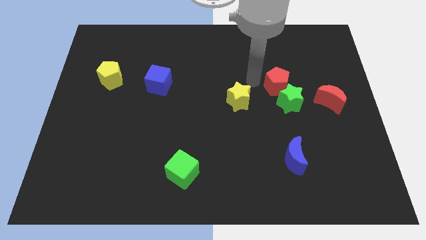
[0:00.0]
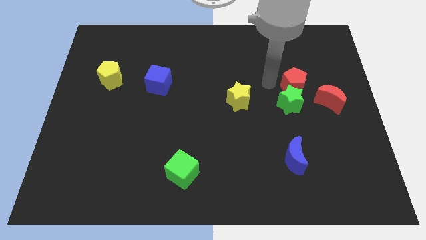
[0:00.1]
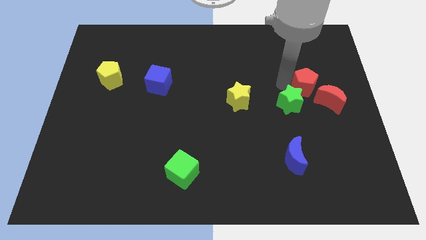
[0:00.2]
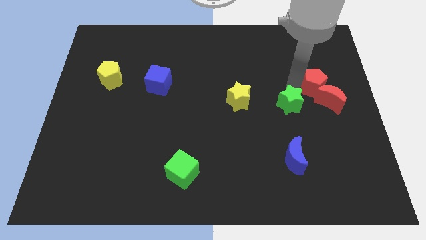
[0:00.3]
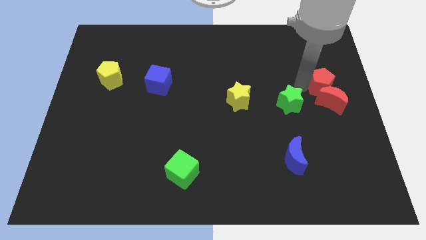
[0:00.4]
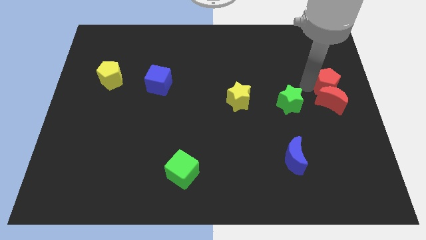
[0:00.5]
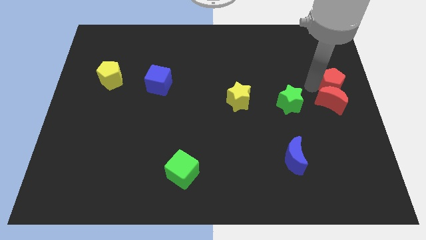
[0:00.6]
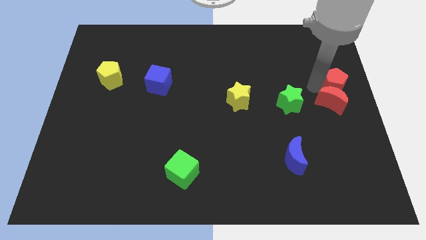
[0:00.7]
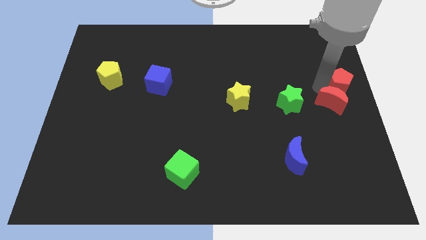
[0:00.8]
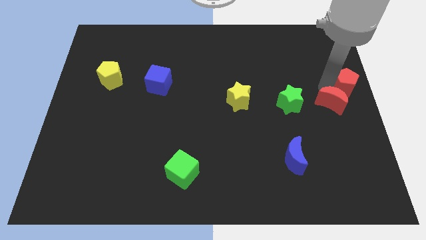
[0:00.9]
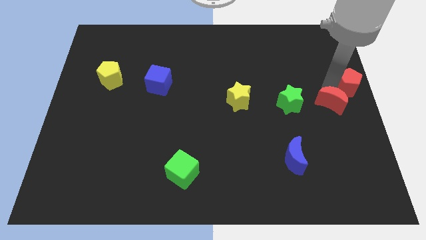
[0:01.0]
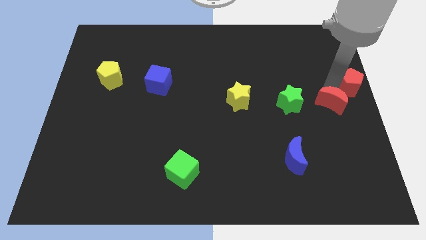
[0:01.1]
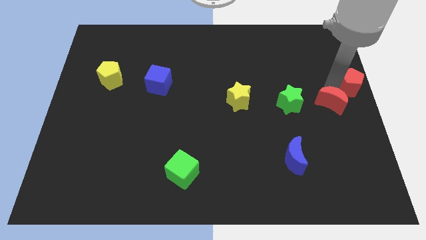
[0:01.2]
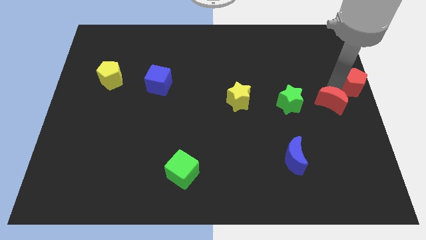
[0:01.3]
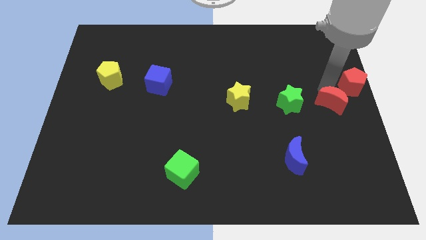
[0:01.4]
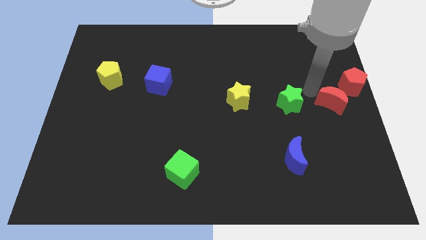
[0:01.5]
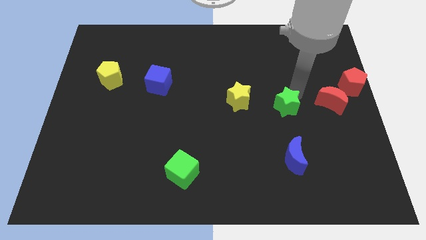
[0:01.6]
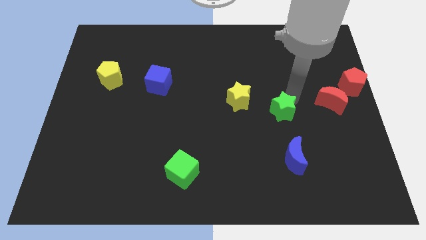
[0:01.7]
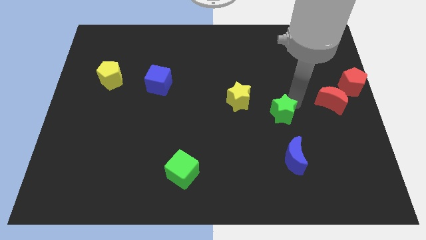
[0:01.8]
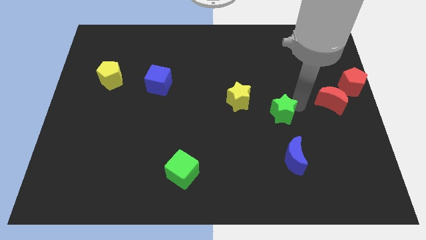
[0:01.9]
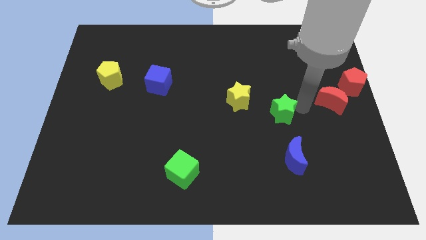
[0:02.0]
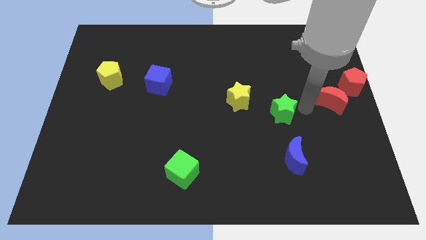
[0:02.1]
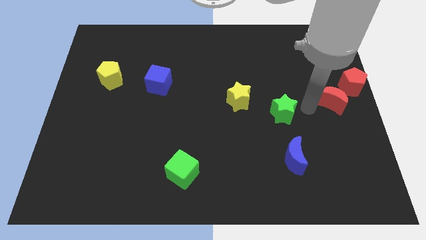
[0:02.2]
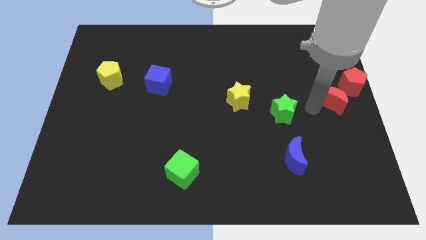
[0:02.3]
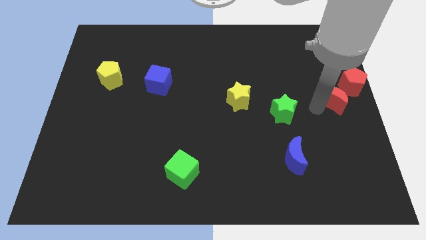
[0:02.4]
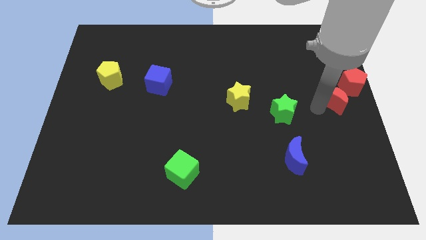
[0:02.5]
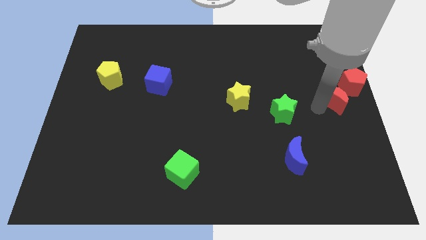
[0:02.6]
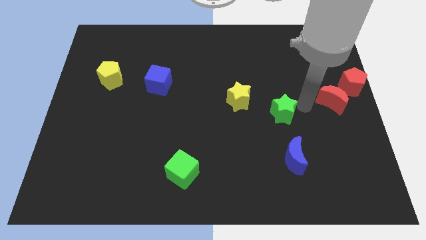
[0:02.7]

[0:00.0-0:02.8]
push the red pentagon to the centre right of the board

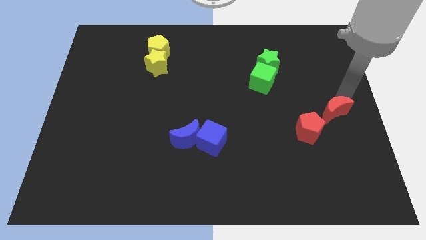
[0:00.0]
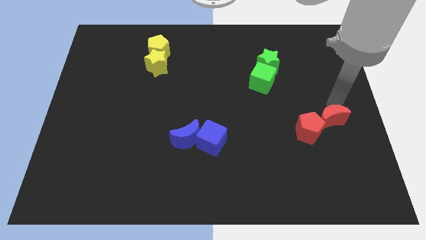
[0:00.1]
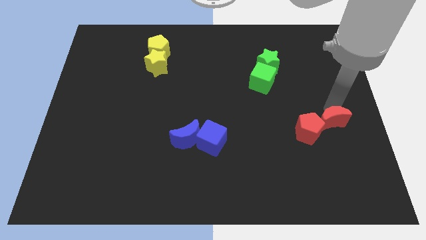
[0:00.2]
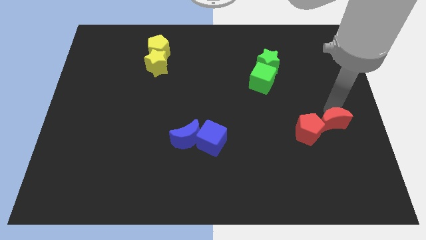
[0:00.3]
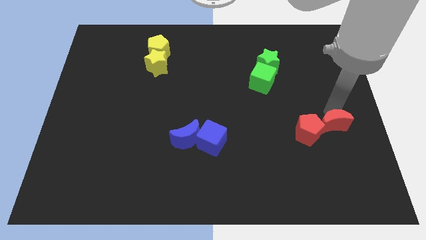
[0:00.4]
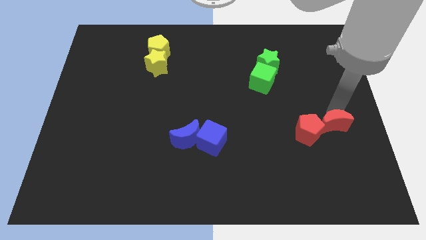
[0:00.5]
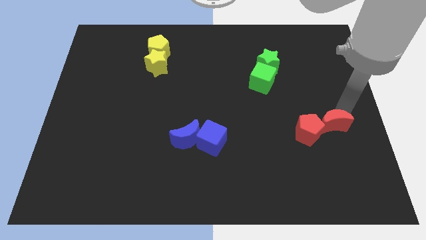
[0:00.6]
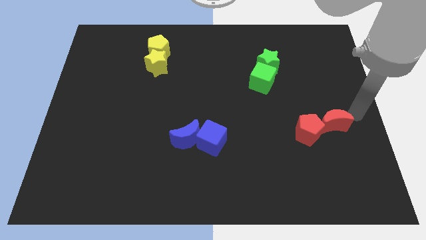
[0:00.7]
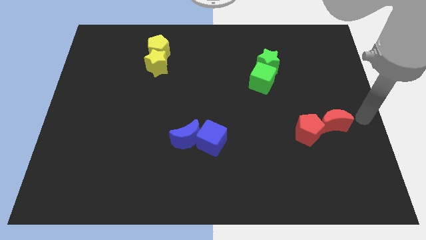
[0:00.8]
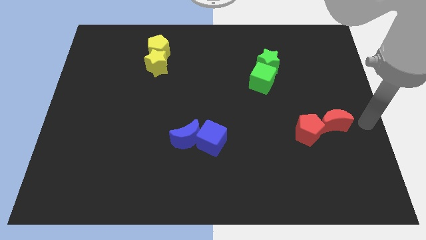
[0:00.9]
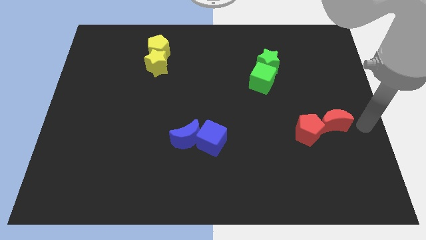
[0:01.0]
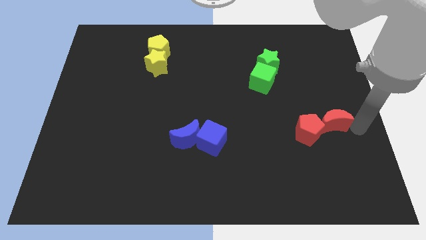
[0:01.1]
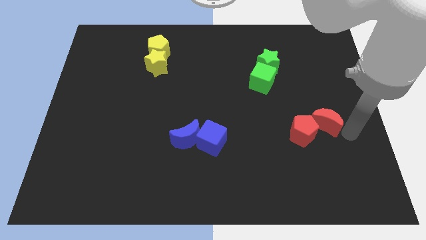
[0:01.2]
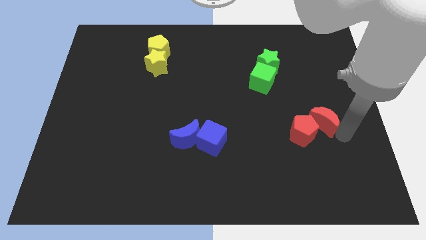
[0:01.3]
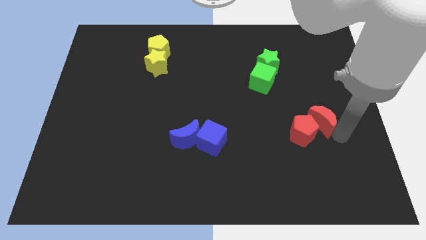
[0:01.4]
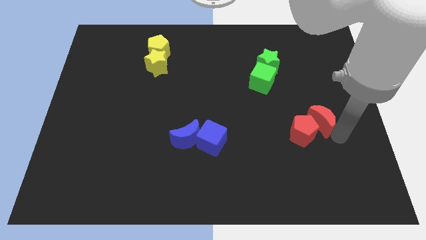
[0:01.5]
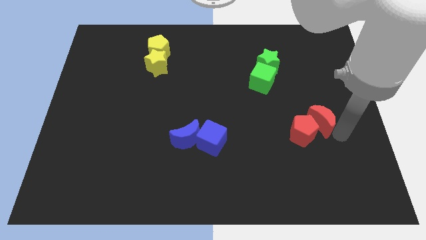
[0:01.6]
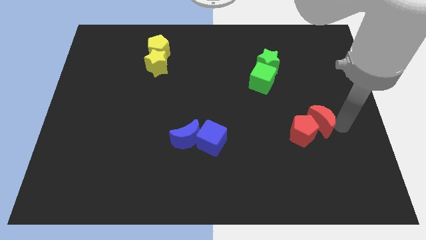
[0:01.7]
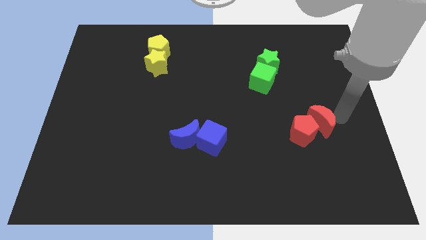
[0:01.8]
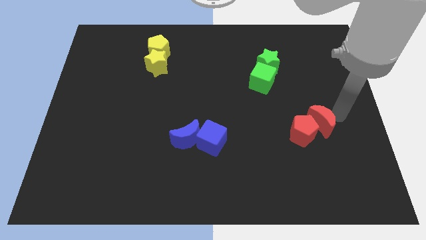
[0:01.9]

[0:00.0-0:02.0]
move red moon slightly to the right center of the board

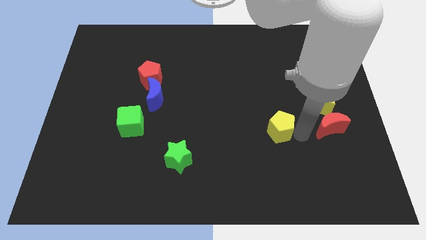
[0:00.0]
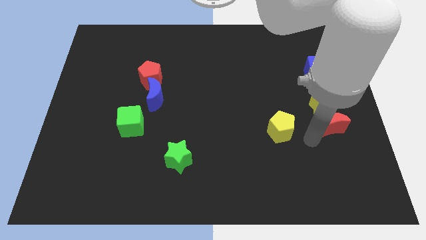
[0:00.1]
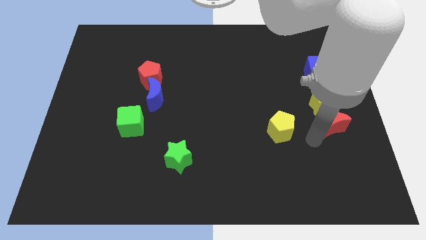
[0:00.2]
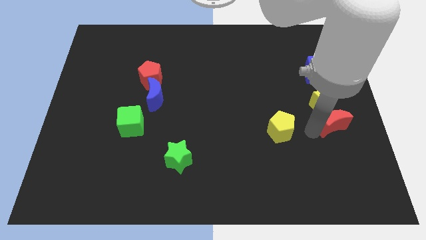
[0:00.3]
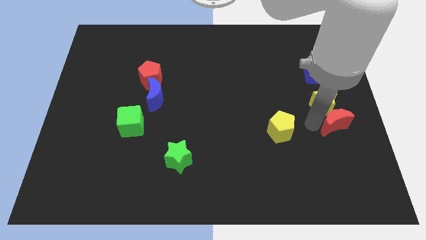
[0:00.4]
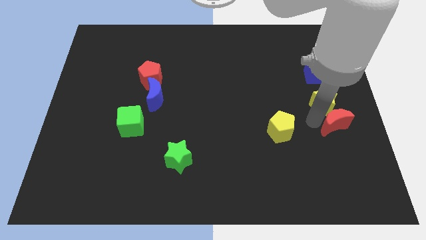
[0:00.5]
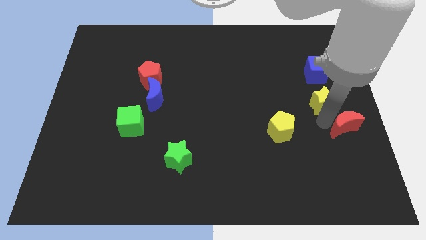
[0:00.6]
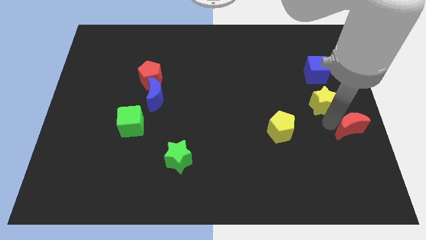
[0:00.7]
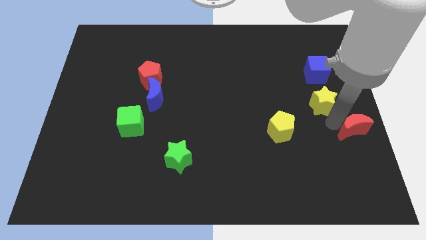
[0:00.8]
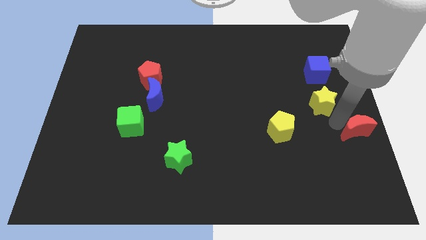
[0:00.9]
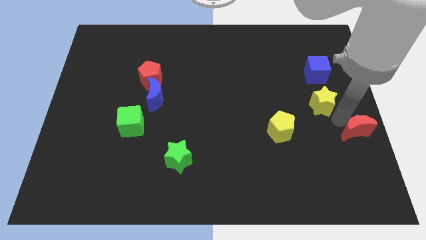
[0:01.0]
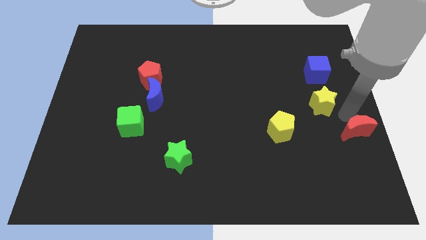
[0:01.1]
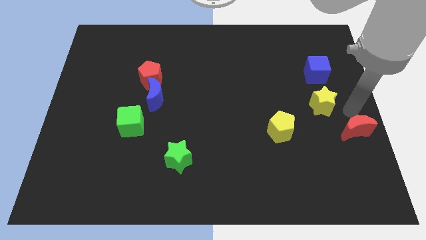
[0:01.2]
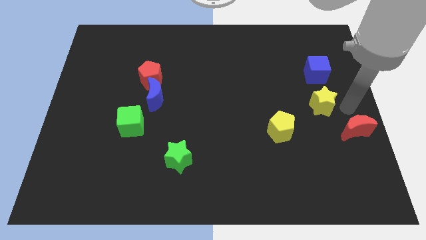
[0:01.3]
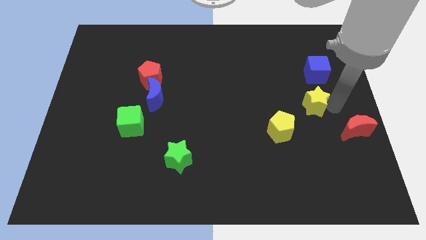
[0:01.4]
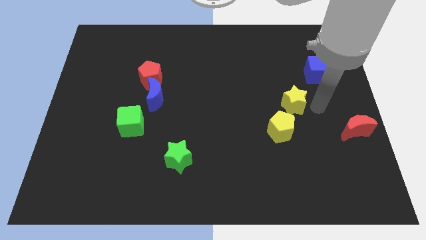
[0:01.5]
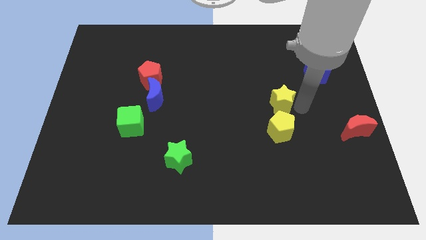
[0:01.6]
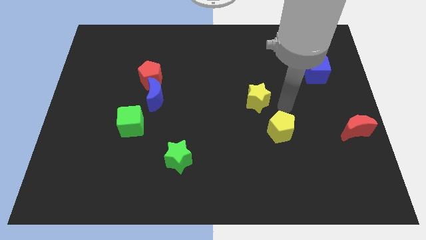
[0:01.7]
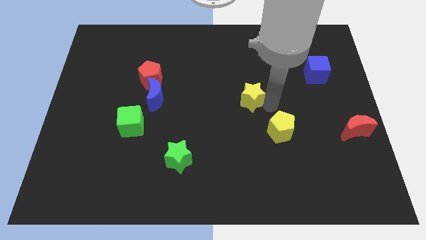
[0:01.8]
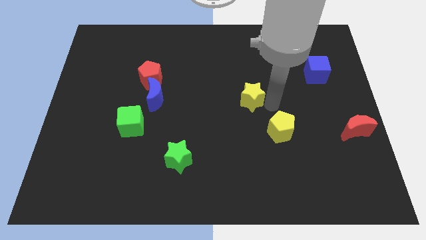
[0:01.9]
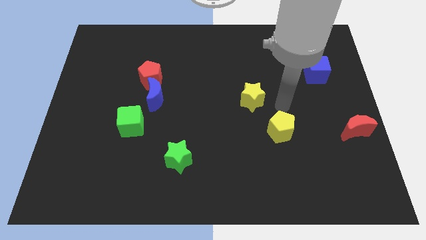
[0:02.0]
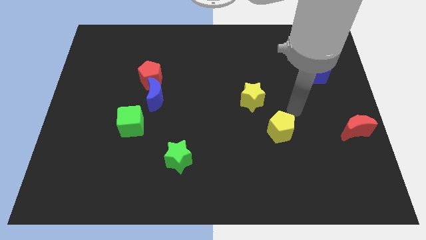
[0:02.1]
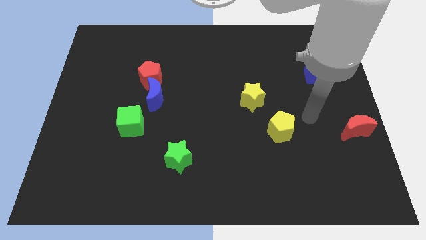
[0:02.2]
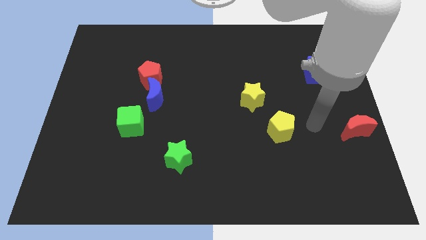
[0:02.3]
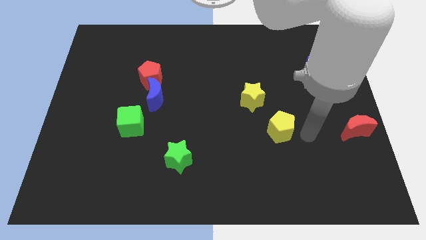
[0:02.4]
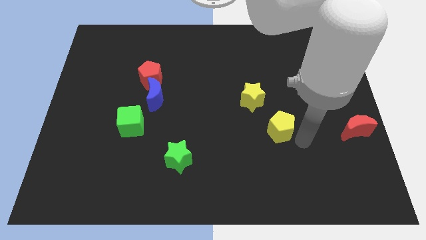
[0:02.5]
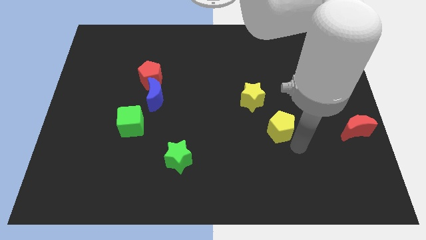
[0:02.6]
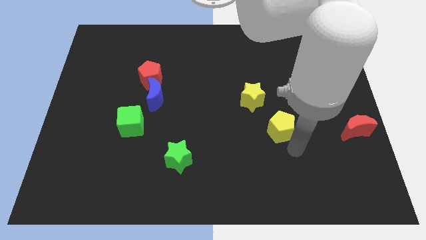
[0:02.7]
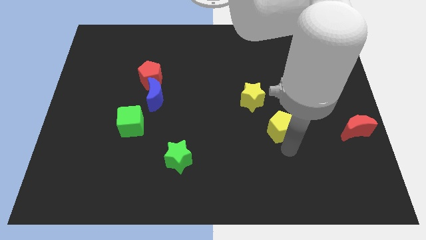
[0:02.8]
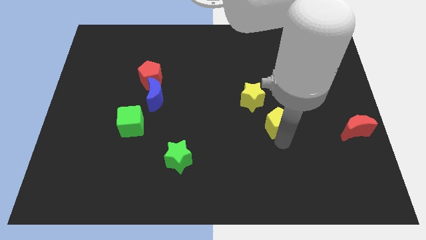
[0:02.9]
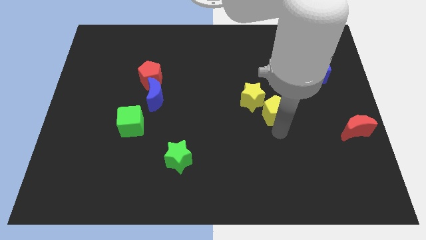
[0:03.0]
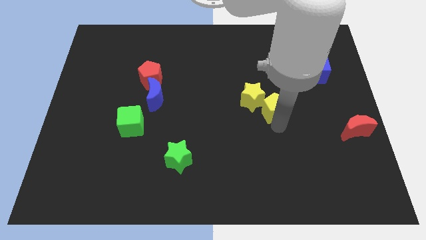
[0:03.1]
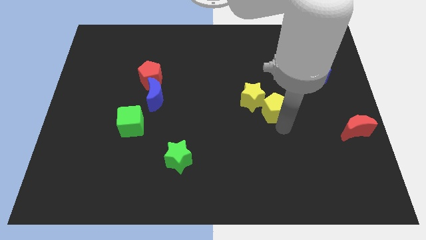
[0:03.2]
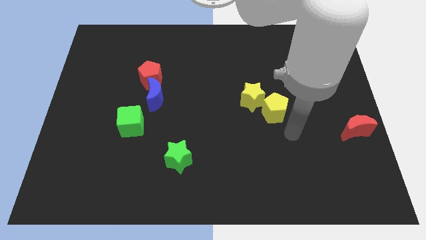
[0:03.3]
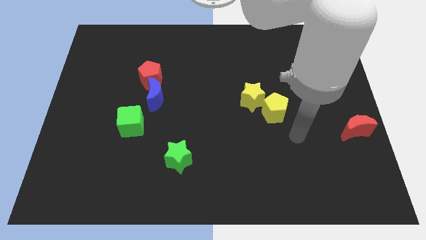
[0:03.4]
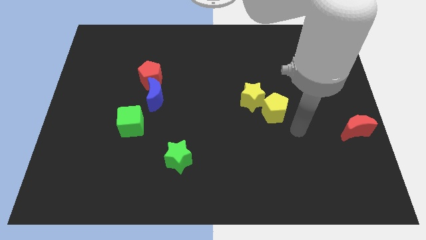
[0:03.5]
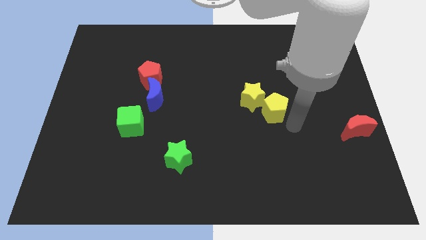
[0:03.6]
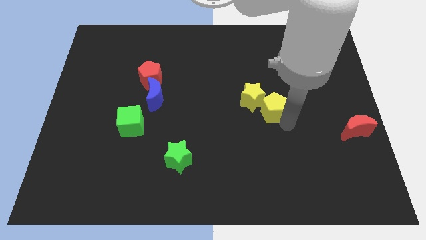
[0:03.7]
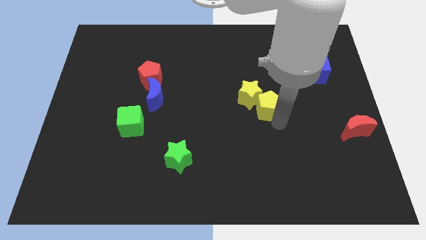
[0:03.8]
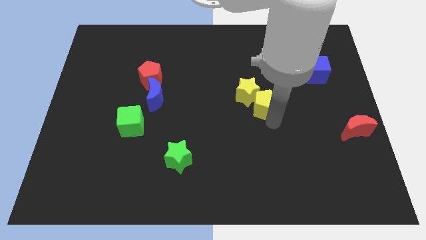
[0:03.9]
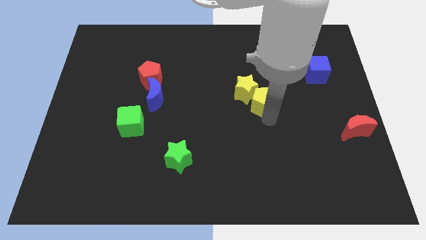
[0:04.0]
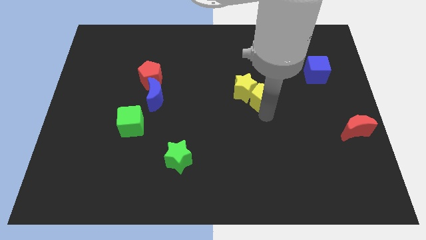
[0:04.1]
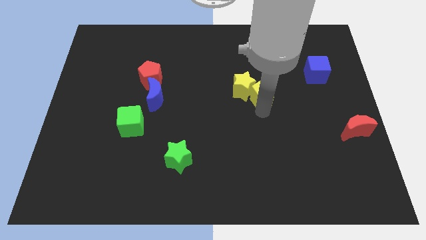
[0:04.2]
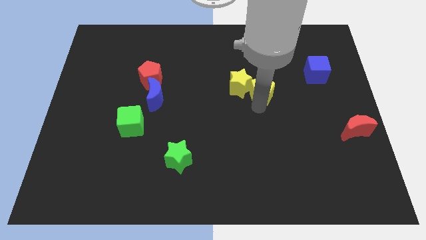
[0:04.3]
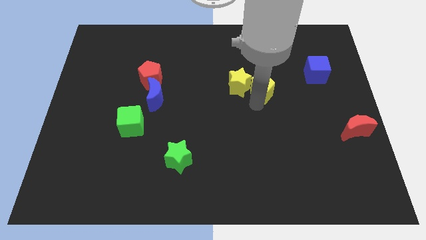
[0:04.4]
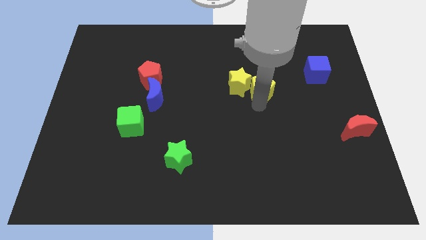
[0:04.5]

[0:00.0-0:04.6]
move the yellow star and yellow pentagon to the top
